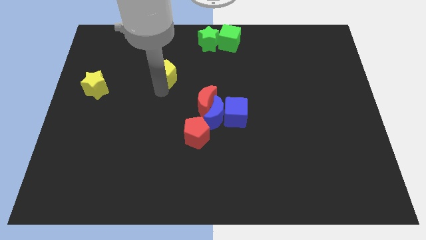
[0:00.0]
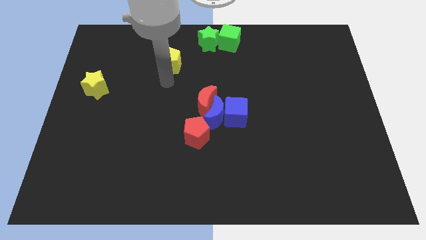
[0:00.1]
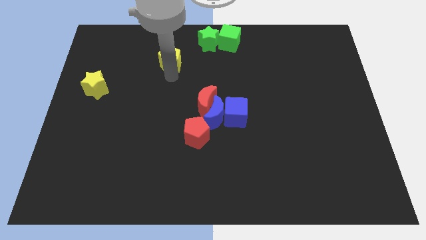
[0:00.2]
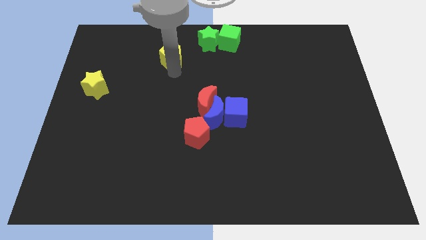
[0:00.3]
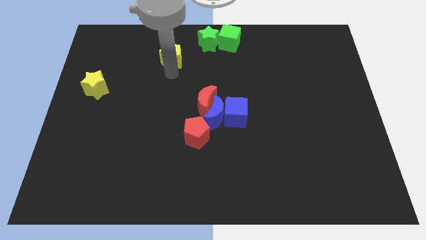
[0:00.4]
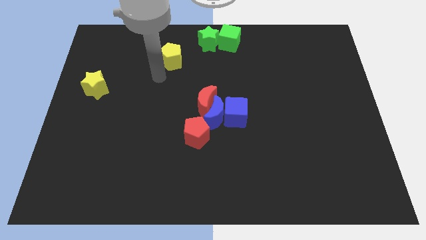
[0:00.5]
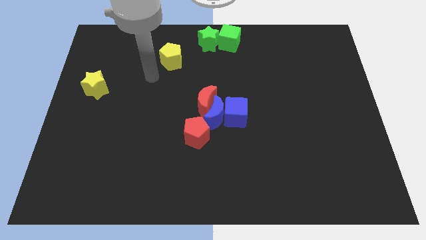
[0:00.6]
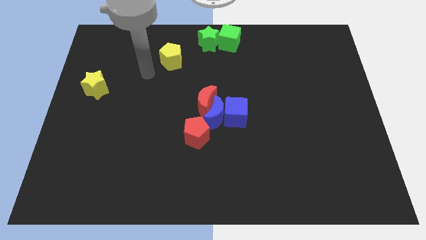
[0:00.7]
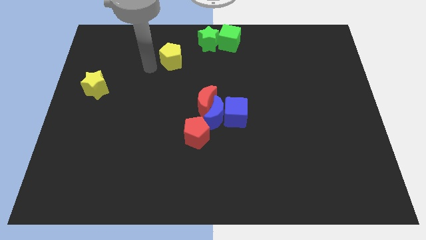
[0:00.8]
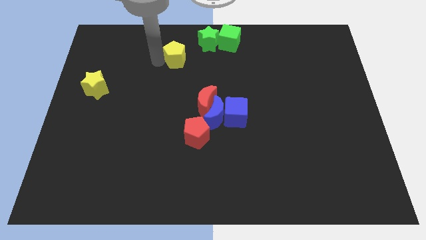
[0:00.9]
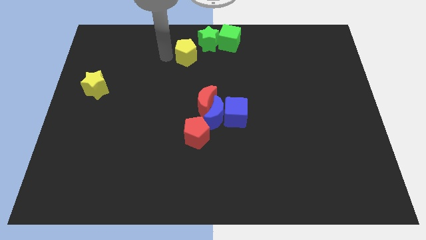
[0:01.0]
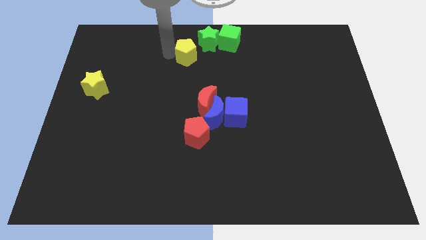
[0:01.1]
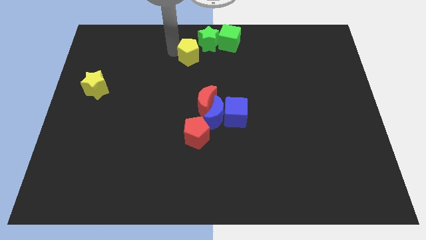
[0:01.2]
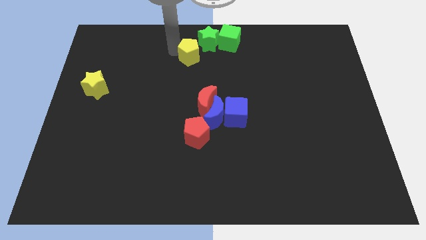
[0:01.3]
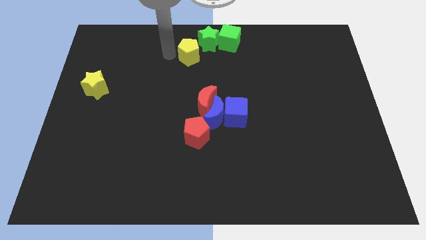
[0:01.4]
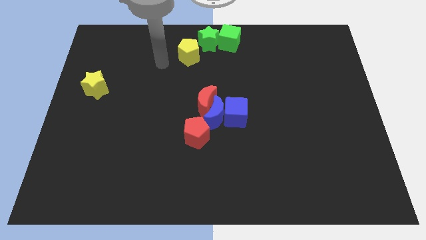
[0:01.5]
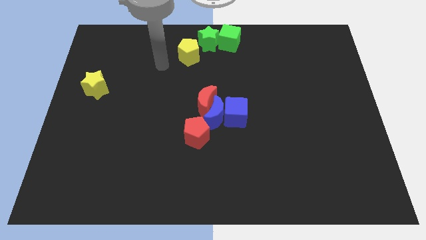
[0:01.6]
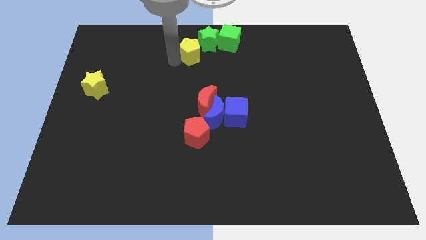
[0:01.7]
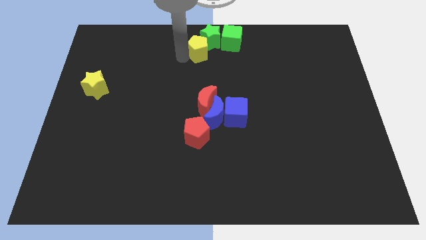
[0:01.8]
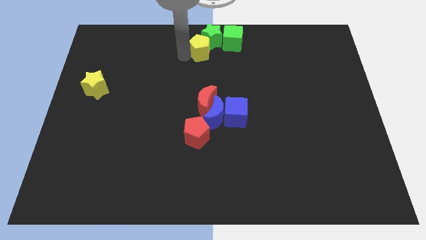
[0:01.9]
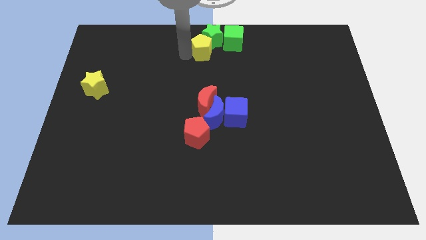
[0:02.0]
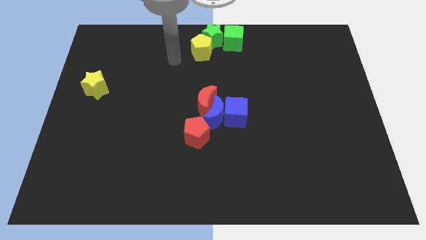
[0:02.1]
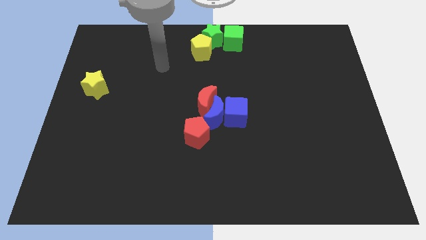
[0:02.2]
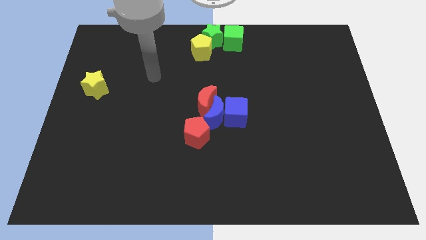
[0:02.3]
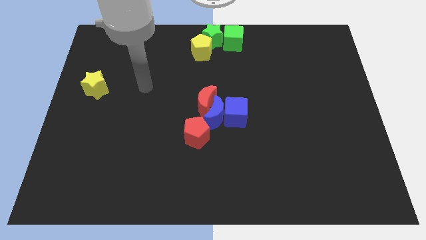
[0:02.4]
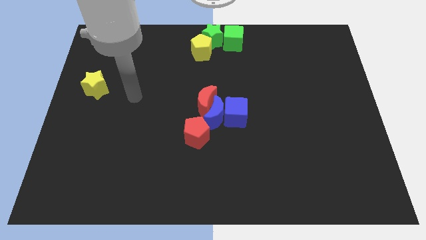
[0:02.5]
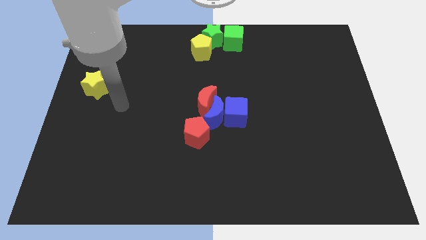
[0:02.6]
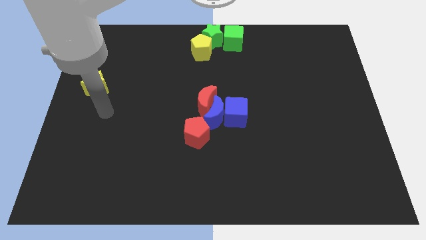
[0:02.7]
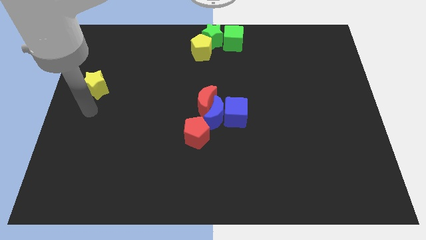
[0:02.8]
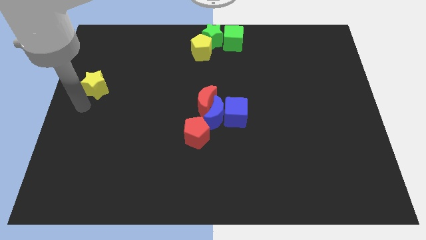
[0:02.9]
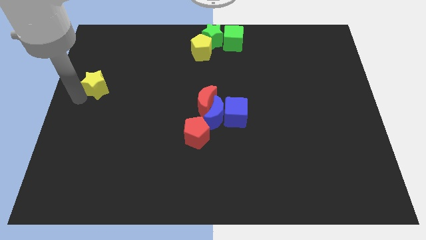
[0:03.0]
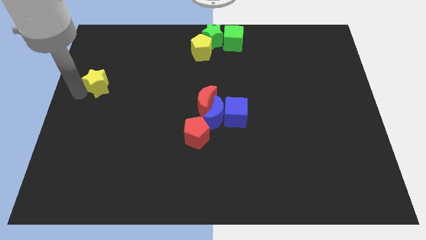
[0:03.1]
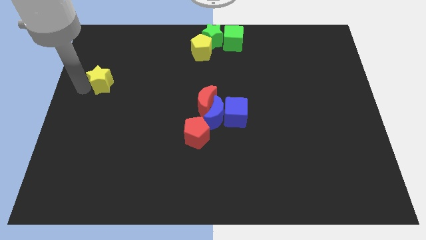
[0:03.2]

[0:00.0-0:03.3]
move yellow pentagon into green star

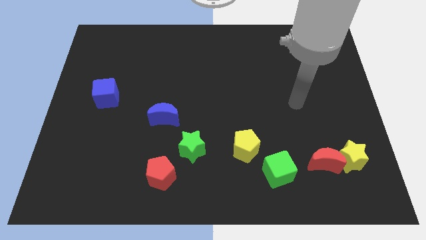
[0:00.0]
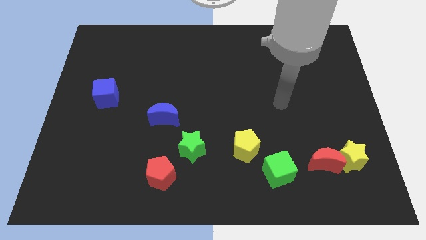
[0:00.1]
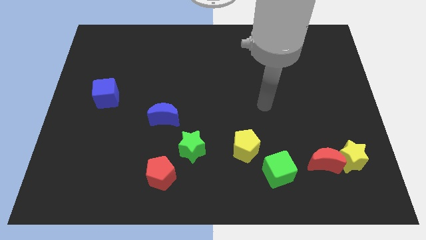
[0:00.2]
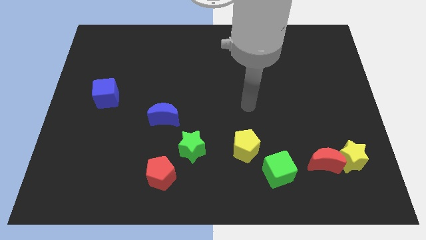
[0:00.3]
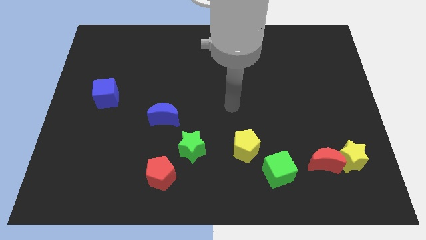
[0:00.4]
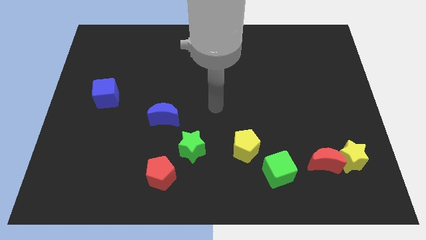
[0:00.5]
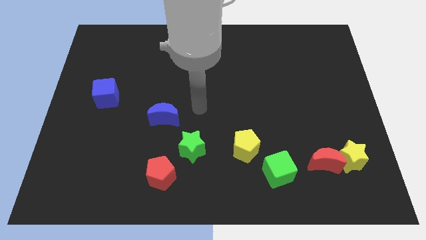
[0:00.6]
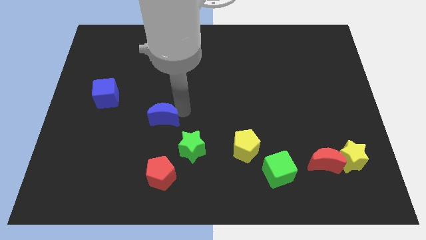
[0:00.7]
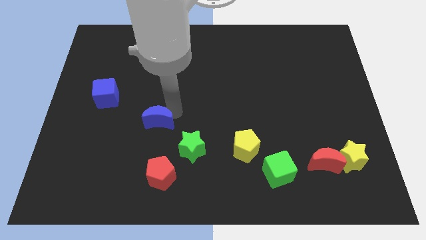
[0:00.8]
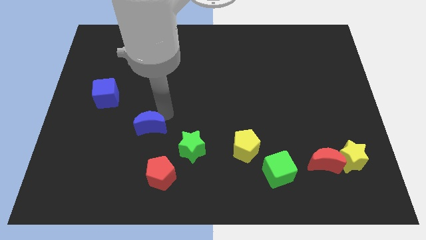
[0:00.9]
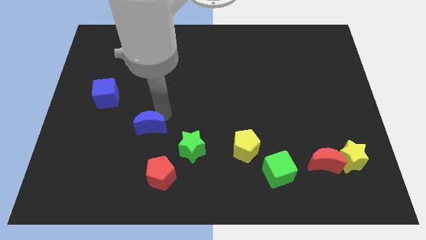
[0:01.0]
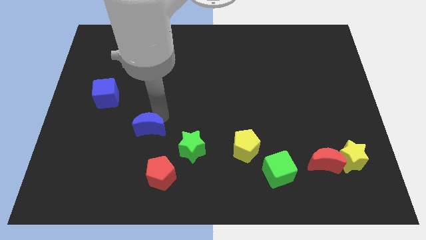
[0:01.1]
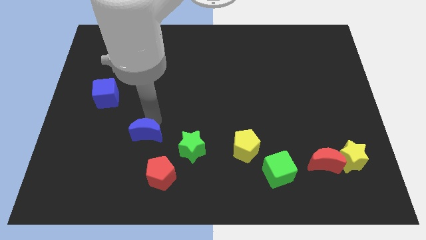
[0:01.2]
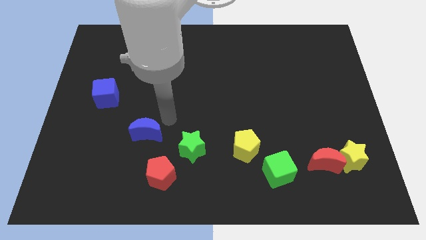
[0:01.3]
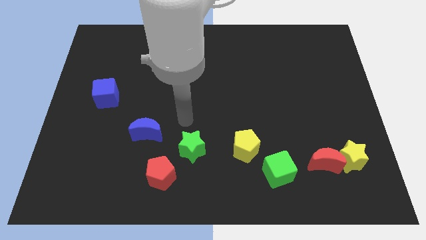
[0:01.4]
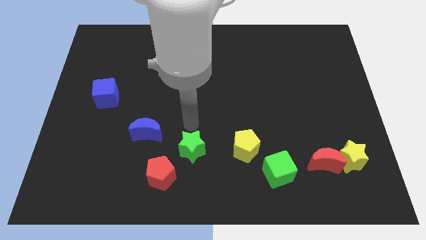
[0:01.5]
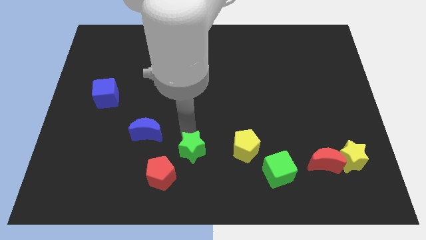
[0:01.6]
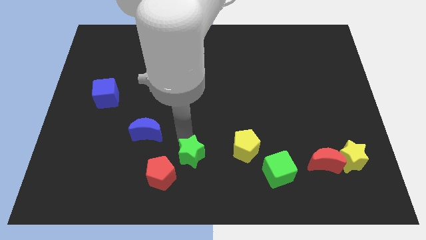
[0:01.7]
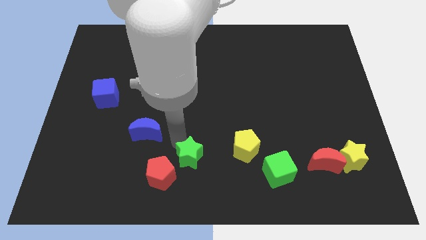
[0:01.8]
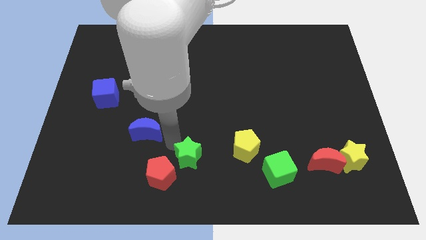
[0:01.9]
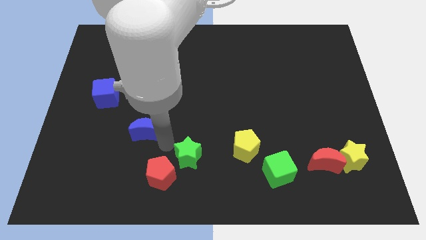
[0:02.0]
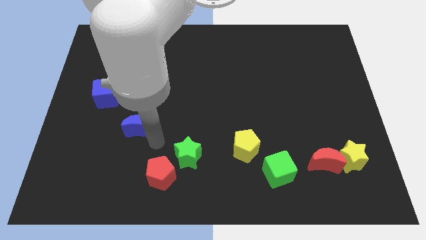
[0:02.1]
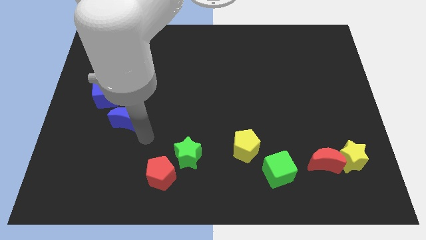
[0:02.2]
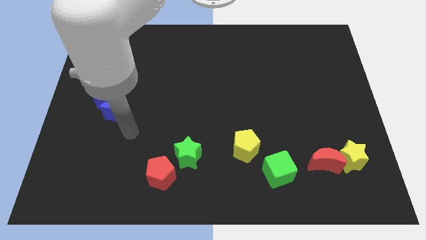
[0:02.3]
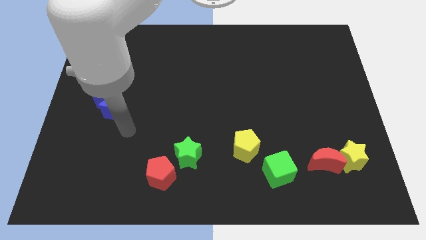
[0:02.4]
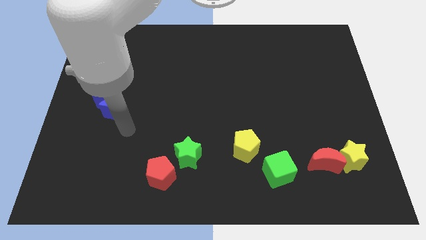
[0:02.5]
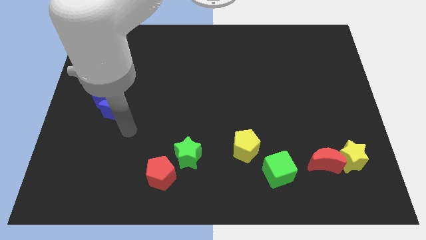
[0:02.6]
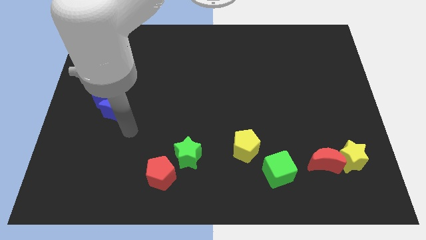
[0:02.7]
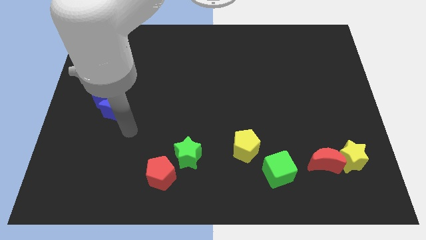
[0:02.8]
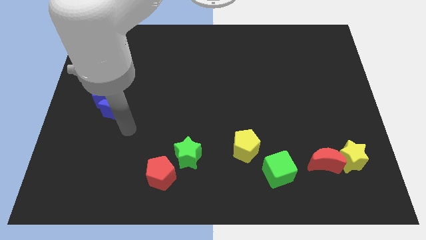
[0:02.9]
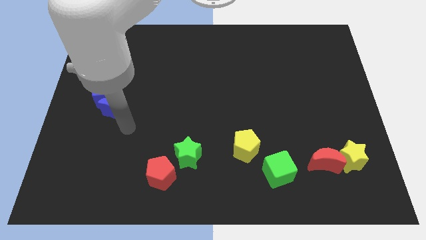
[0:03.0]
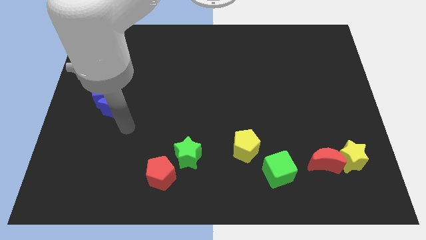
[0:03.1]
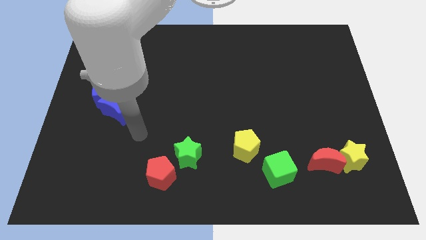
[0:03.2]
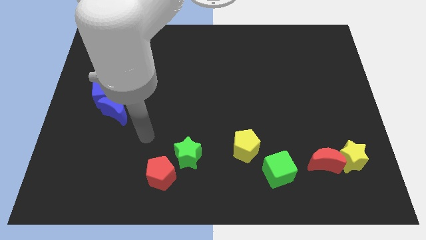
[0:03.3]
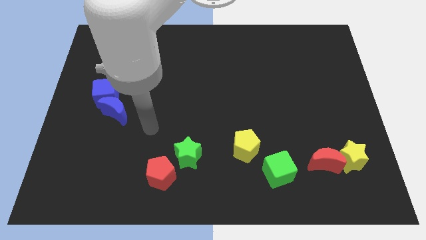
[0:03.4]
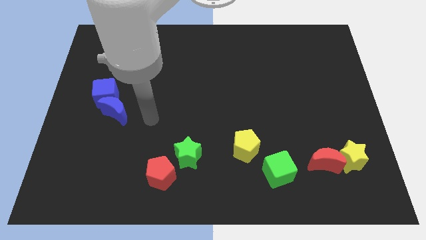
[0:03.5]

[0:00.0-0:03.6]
push the blue moon into the blue cube

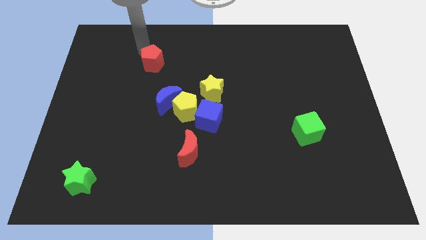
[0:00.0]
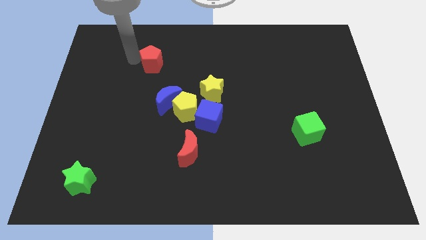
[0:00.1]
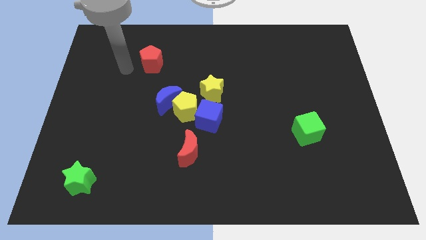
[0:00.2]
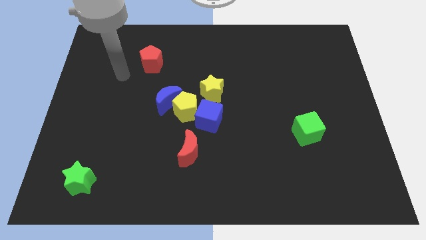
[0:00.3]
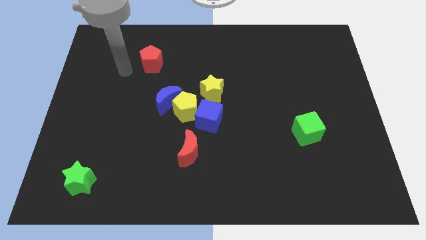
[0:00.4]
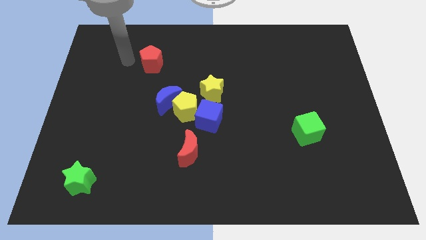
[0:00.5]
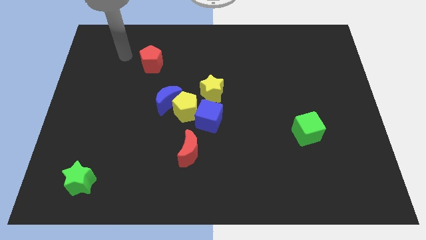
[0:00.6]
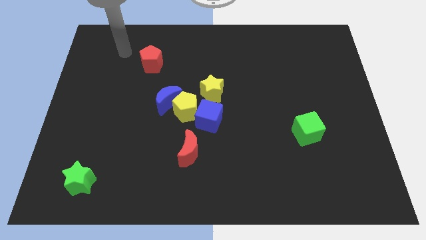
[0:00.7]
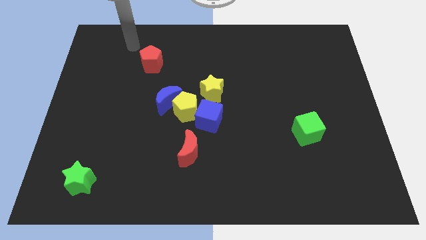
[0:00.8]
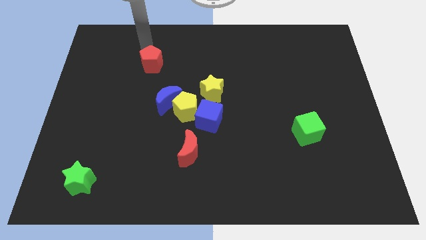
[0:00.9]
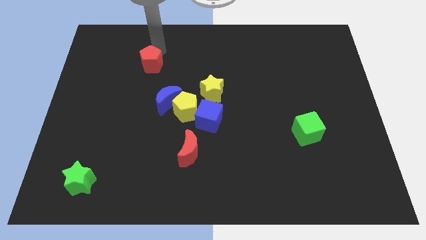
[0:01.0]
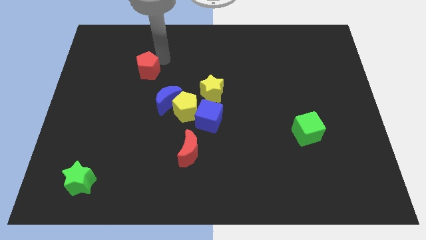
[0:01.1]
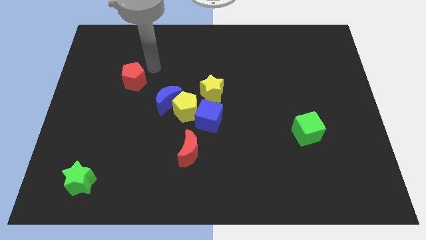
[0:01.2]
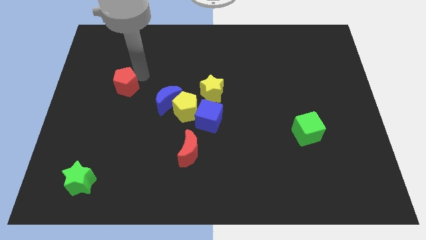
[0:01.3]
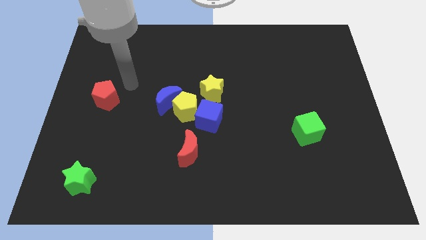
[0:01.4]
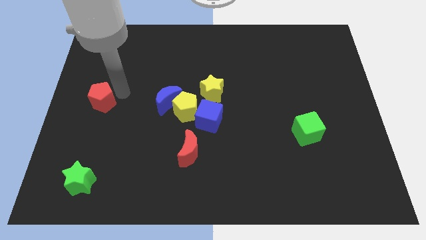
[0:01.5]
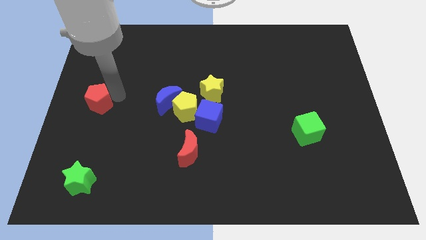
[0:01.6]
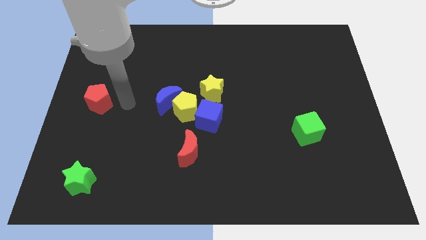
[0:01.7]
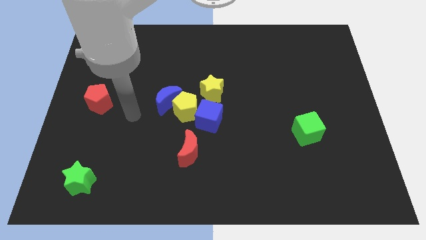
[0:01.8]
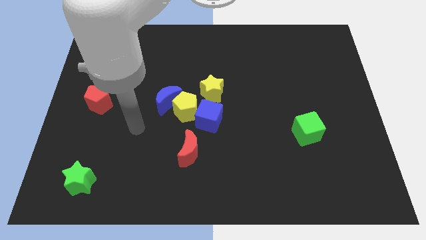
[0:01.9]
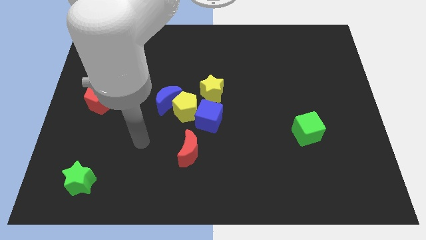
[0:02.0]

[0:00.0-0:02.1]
move red pentagon towards center left
